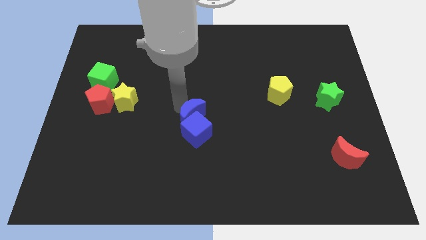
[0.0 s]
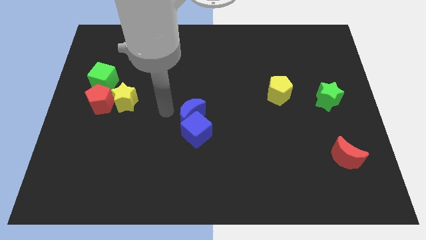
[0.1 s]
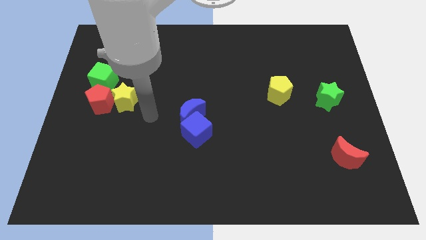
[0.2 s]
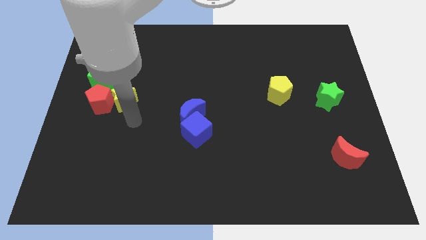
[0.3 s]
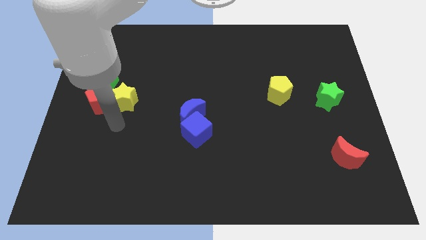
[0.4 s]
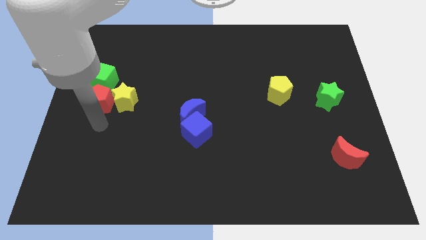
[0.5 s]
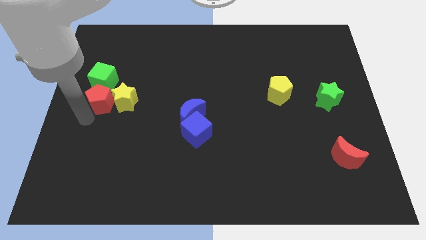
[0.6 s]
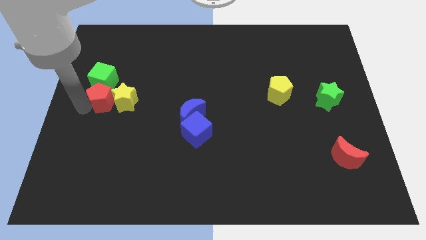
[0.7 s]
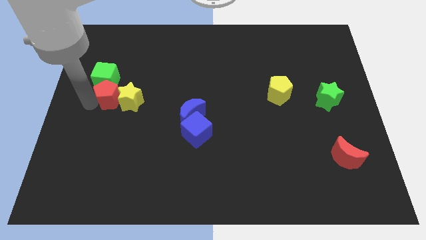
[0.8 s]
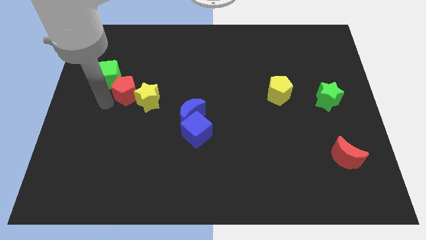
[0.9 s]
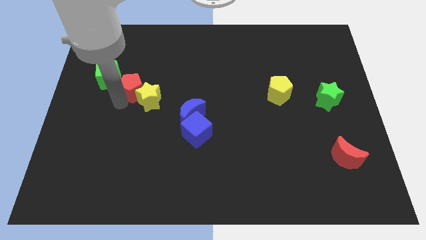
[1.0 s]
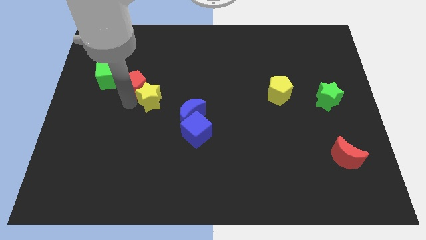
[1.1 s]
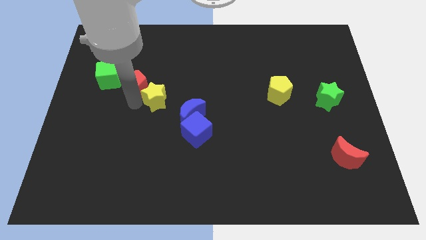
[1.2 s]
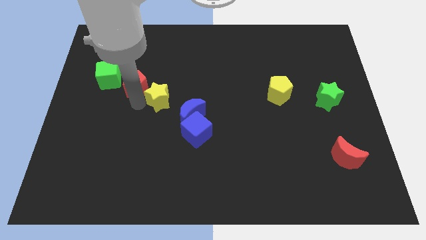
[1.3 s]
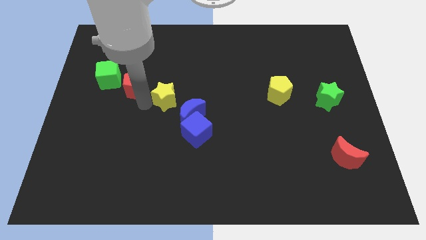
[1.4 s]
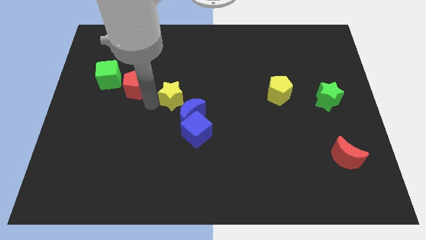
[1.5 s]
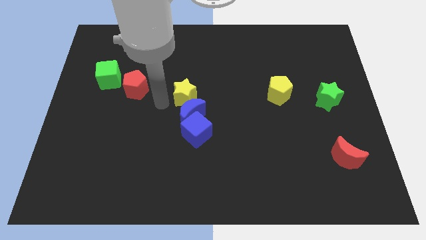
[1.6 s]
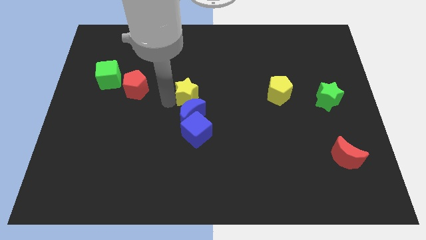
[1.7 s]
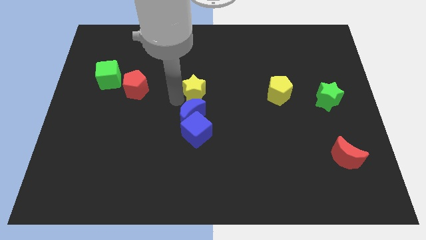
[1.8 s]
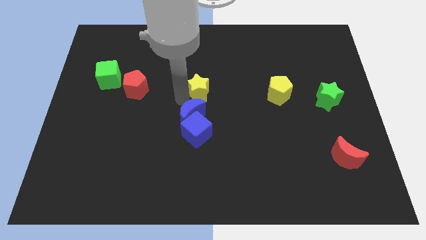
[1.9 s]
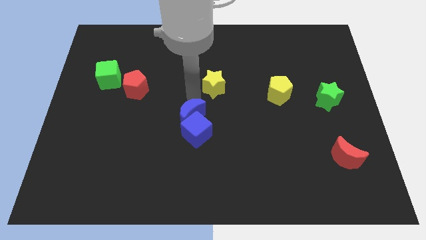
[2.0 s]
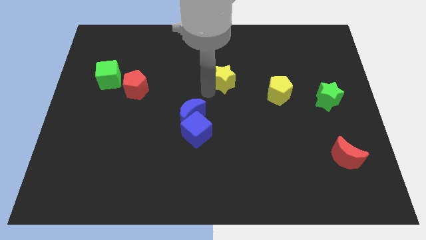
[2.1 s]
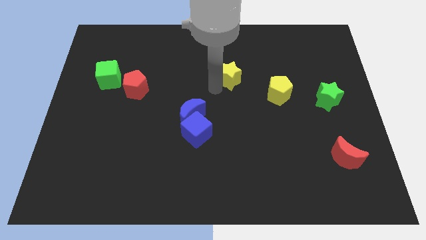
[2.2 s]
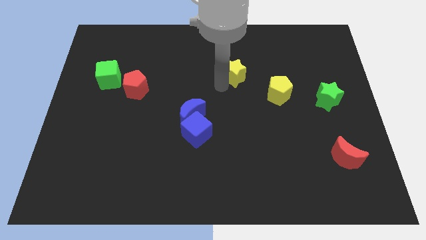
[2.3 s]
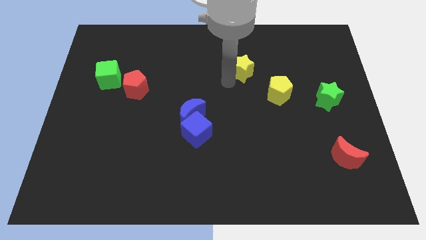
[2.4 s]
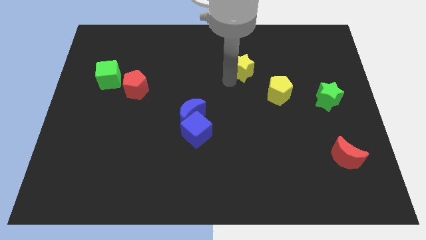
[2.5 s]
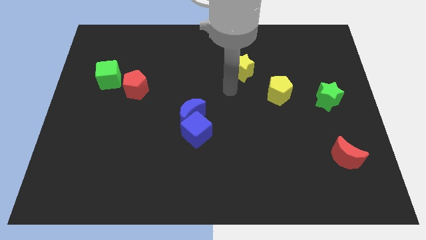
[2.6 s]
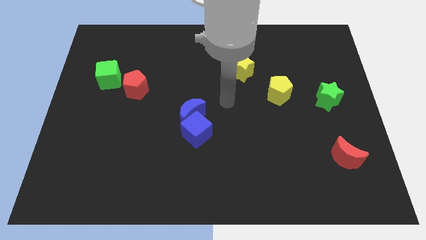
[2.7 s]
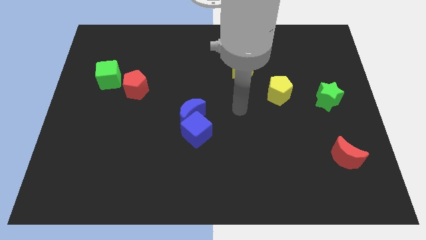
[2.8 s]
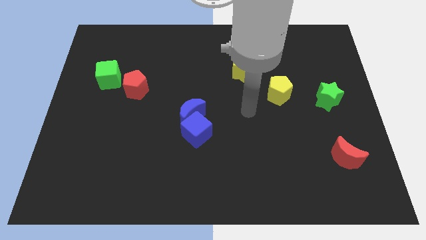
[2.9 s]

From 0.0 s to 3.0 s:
move the yellow star diagonally top left to yellow pentagon

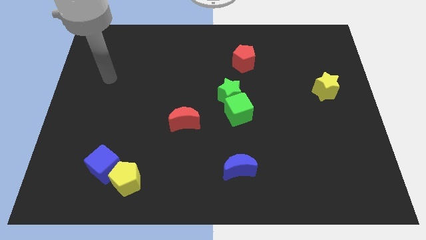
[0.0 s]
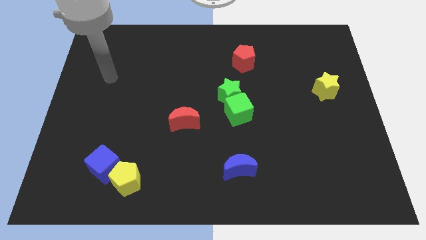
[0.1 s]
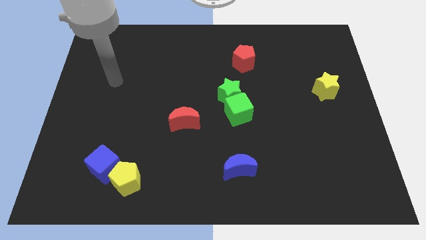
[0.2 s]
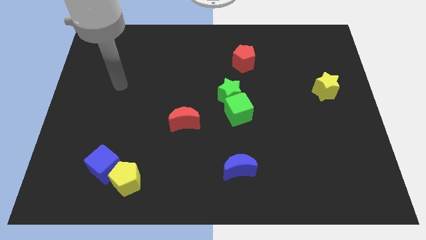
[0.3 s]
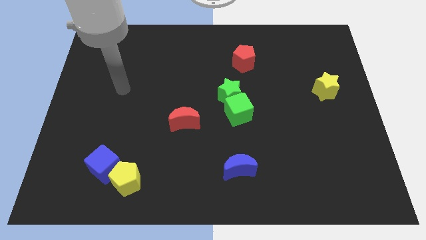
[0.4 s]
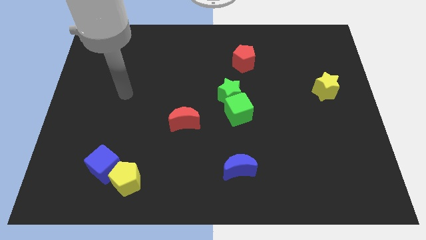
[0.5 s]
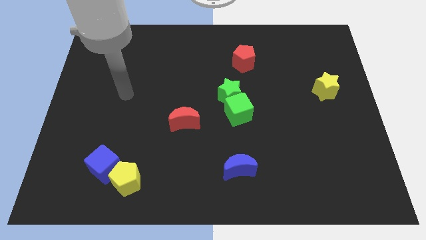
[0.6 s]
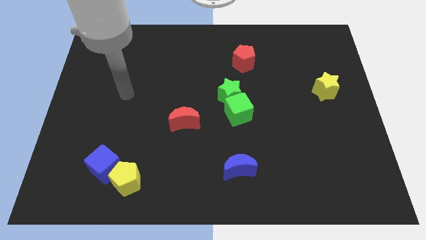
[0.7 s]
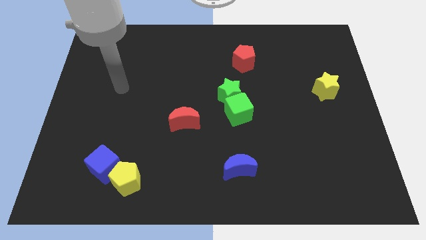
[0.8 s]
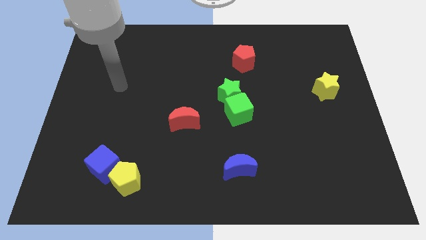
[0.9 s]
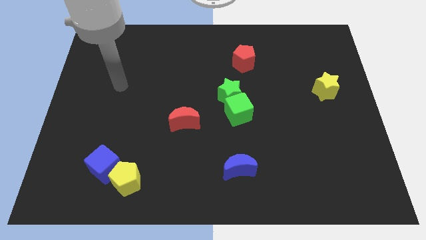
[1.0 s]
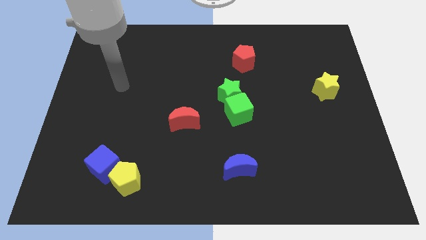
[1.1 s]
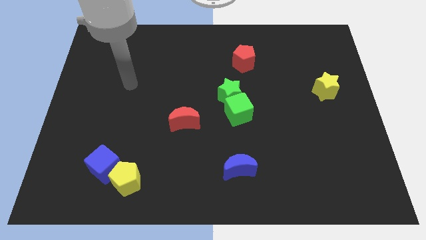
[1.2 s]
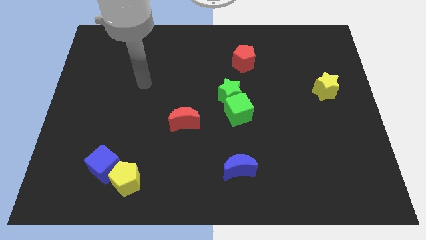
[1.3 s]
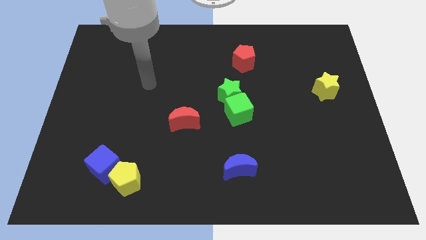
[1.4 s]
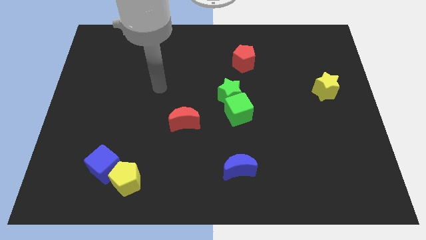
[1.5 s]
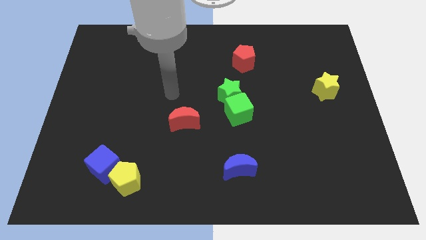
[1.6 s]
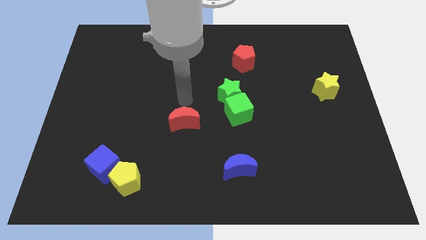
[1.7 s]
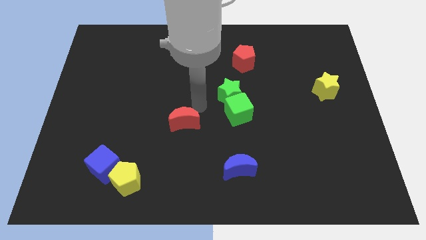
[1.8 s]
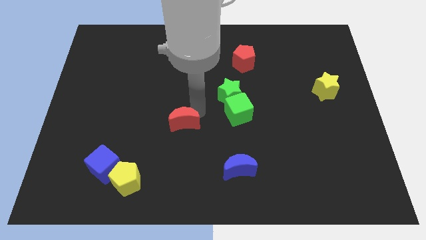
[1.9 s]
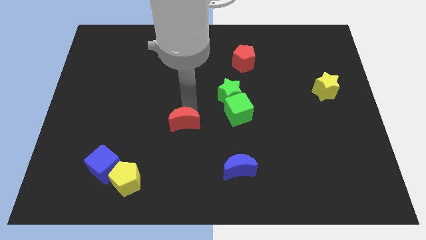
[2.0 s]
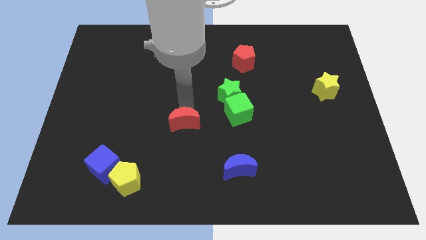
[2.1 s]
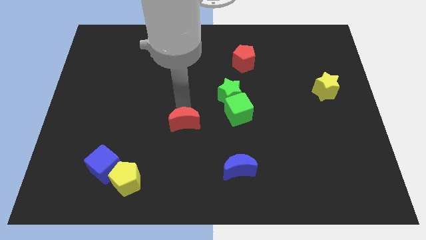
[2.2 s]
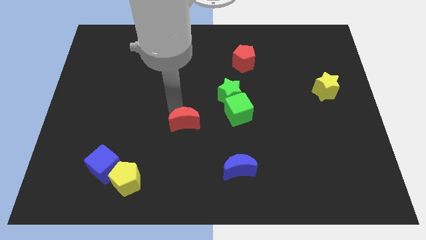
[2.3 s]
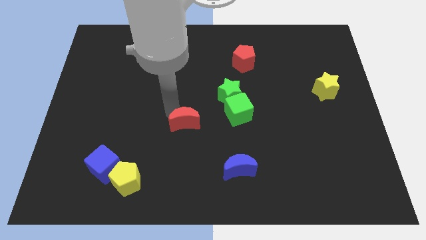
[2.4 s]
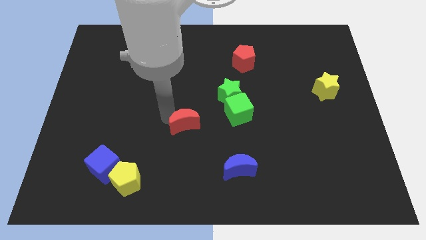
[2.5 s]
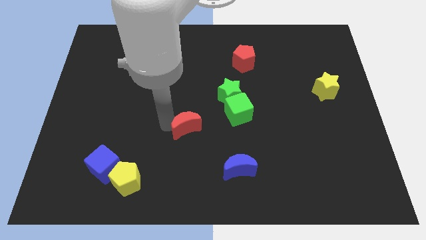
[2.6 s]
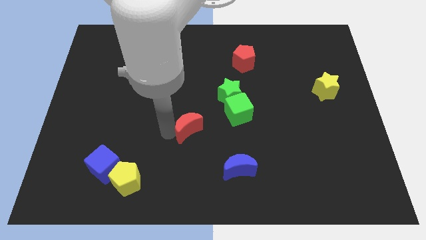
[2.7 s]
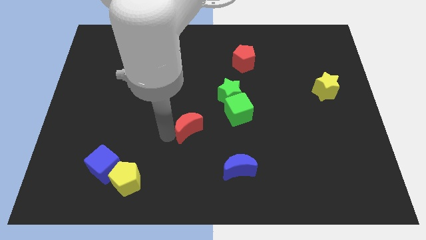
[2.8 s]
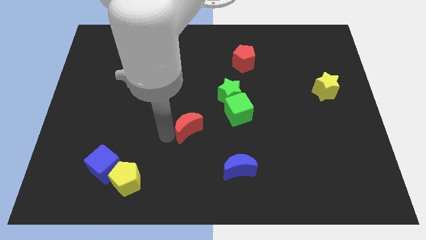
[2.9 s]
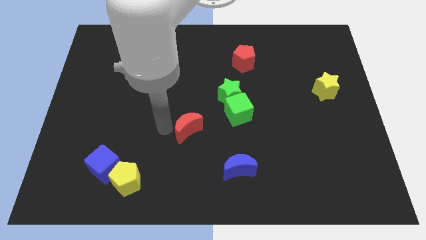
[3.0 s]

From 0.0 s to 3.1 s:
slide red moon slightly to the right

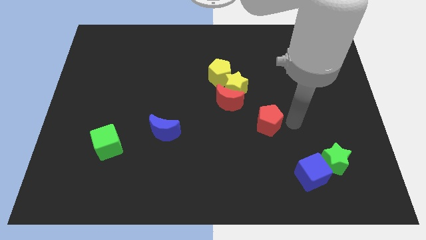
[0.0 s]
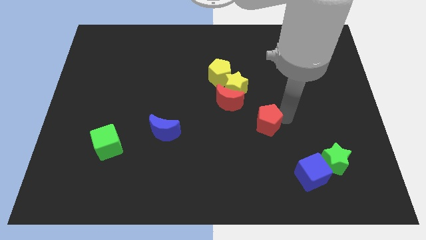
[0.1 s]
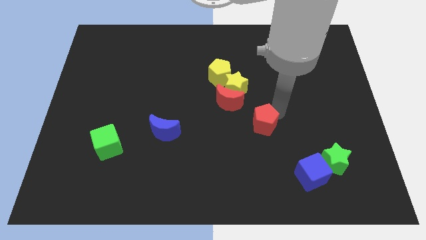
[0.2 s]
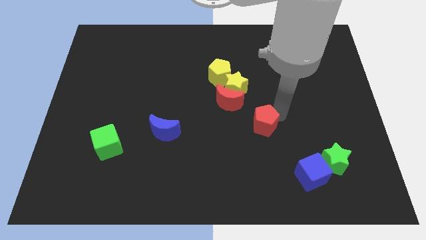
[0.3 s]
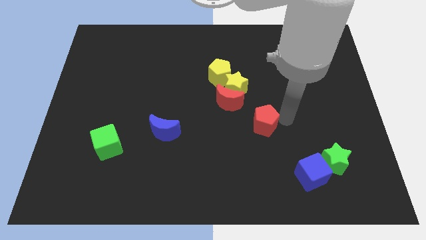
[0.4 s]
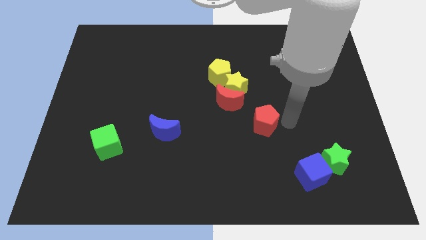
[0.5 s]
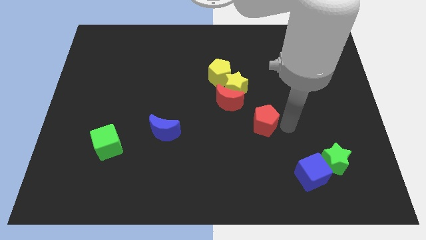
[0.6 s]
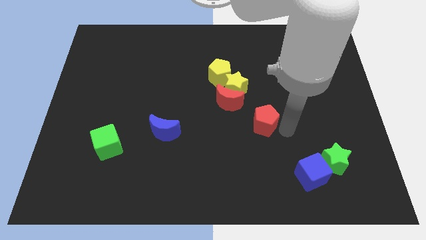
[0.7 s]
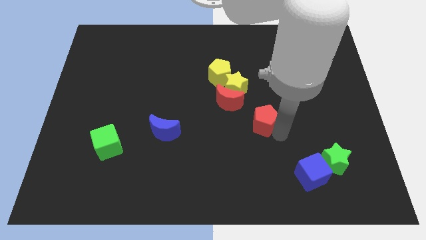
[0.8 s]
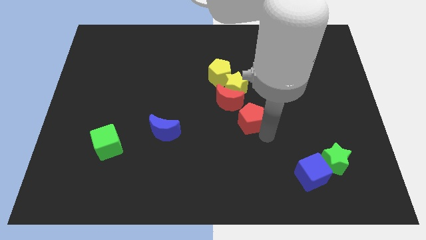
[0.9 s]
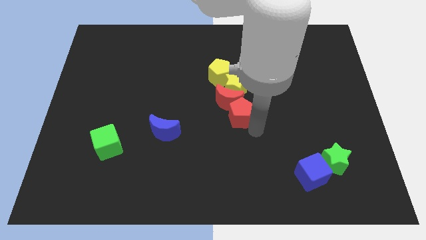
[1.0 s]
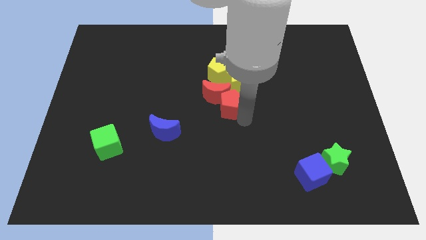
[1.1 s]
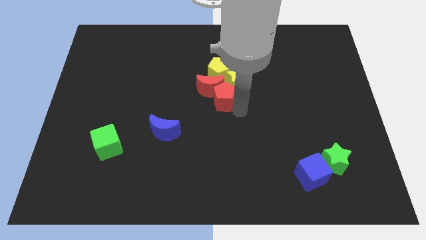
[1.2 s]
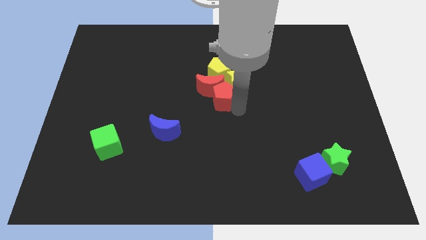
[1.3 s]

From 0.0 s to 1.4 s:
push red pentagon into red crescent

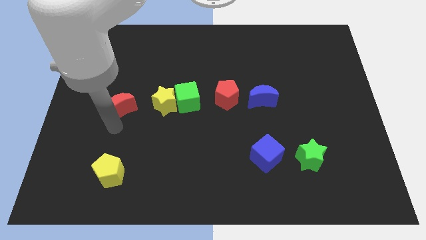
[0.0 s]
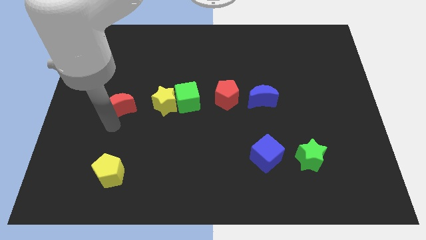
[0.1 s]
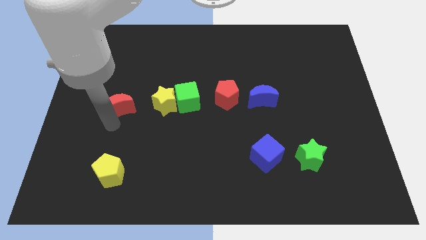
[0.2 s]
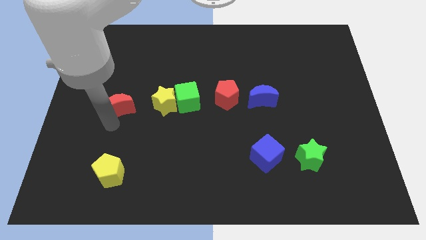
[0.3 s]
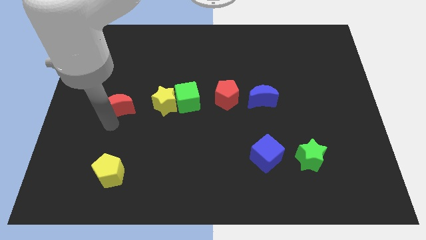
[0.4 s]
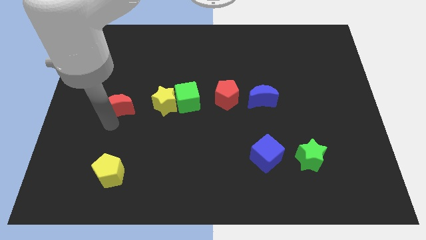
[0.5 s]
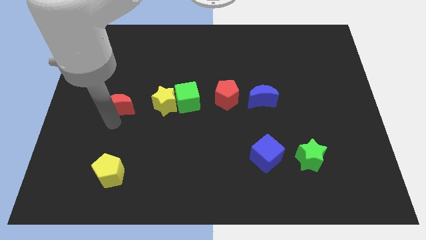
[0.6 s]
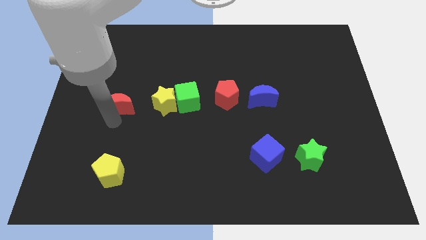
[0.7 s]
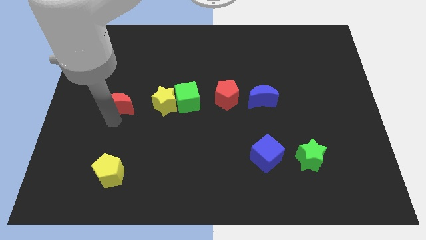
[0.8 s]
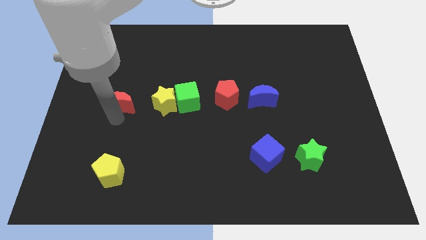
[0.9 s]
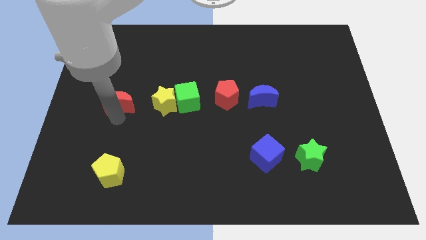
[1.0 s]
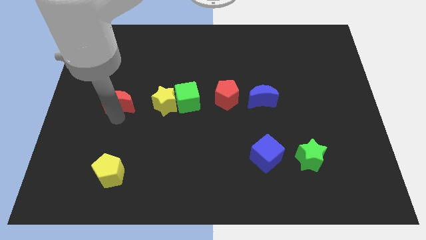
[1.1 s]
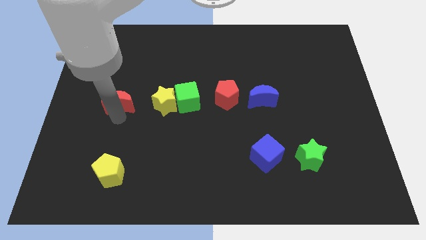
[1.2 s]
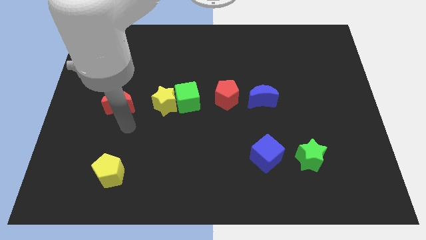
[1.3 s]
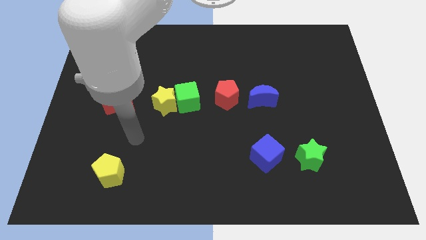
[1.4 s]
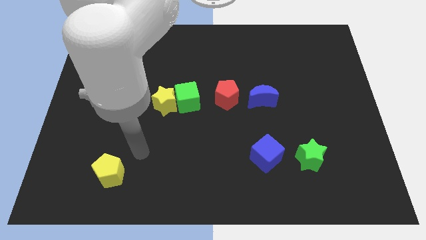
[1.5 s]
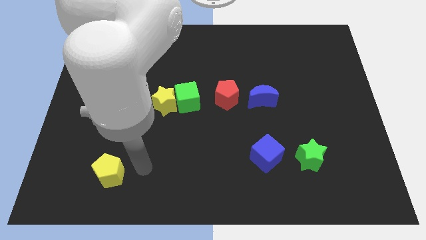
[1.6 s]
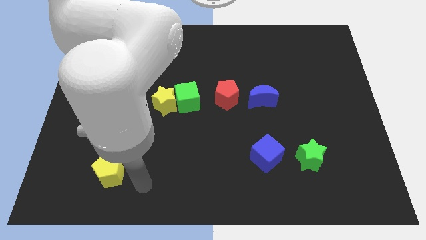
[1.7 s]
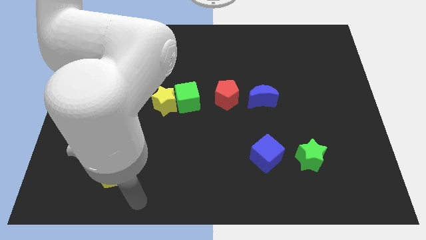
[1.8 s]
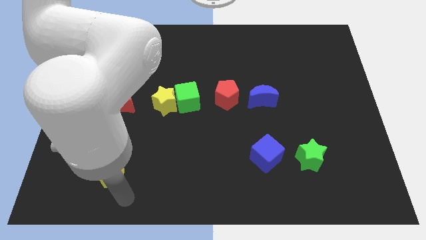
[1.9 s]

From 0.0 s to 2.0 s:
move your arm to the bottom of the yellow pentagon
